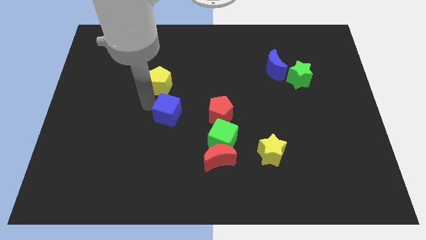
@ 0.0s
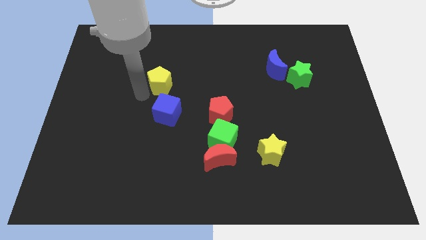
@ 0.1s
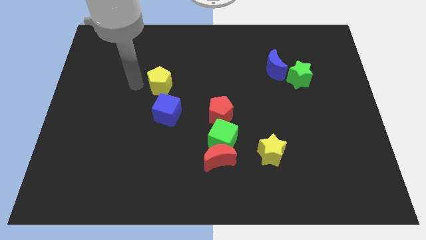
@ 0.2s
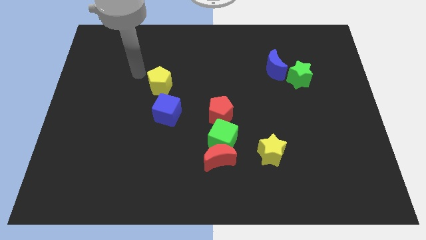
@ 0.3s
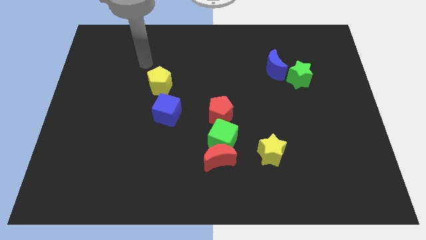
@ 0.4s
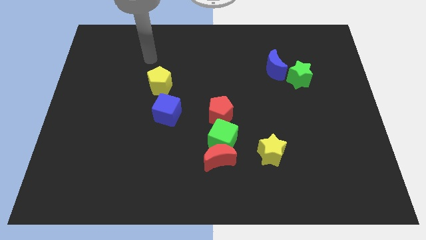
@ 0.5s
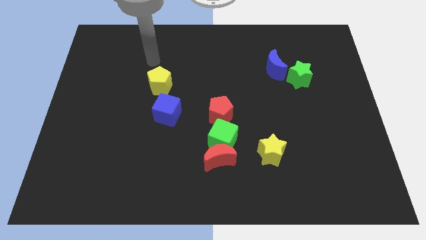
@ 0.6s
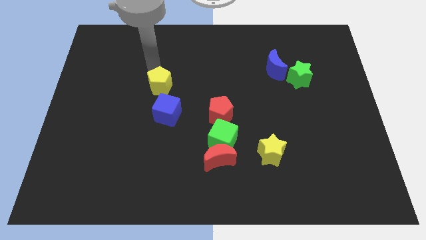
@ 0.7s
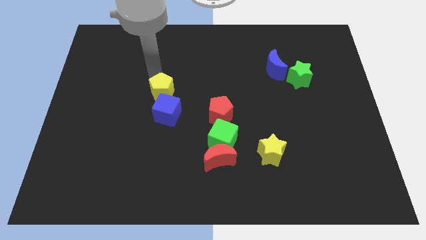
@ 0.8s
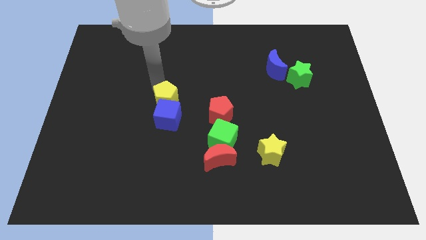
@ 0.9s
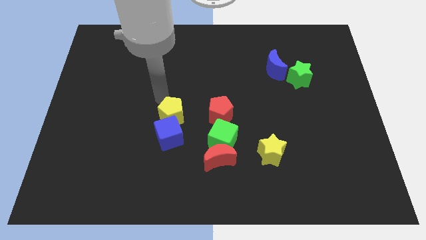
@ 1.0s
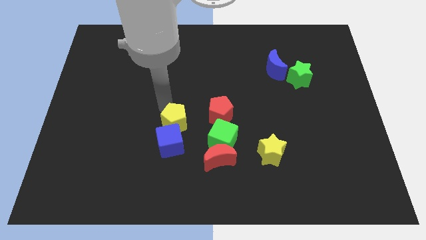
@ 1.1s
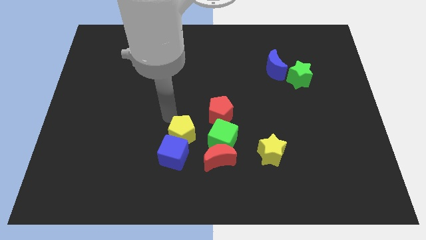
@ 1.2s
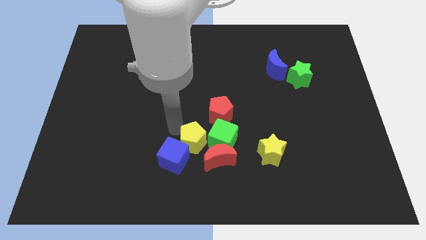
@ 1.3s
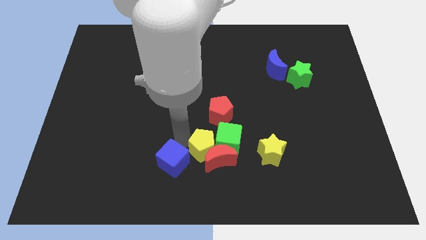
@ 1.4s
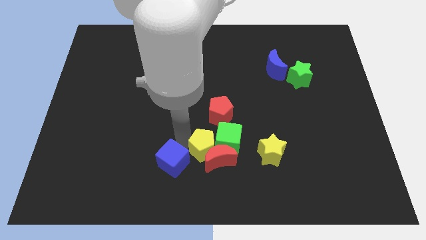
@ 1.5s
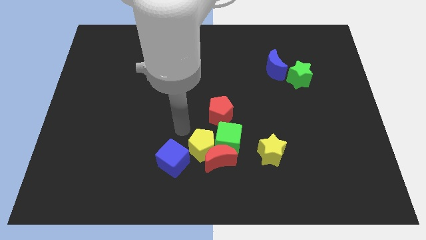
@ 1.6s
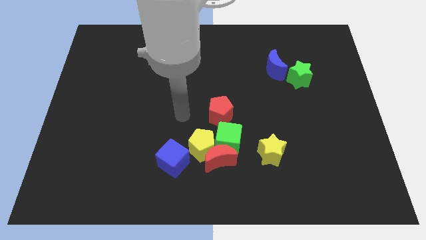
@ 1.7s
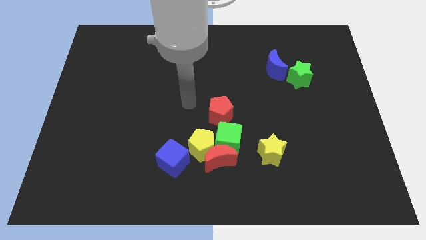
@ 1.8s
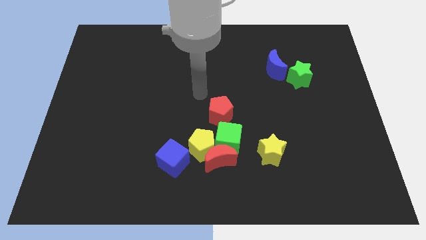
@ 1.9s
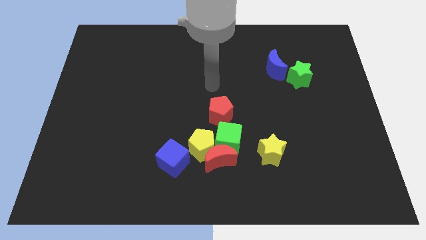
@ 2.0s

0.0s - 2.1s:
move yellow pentagon and blue cube towards red moon

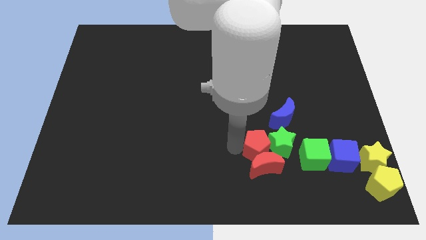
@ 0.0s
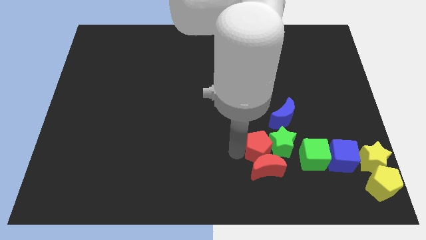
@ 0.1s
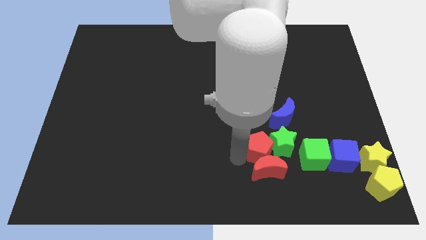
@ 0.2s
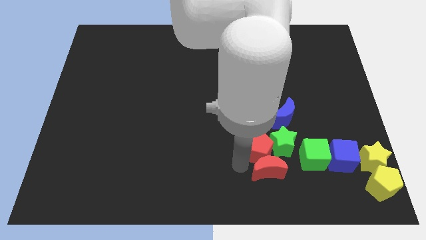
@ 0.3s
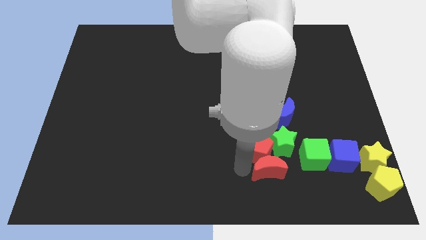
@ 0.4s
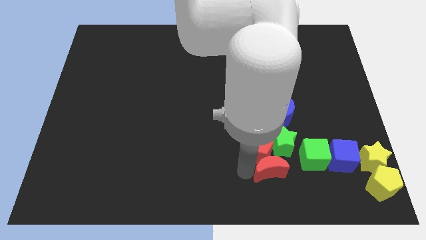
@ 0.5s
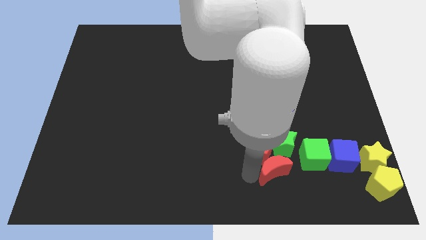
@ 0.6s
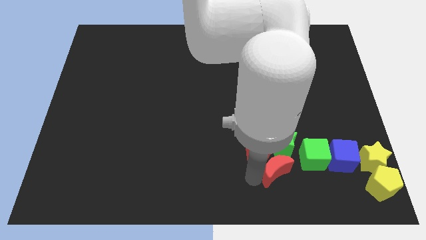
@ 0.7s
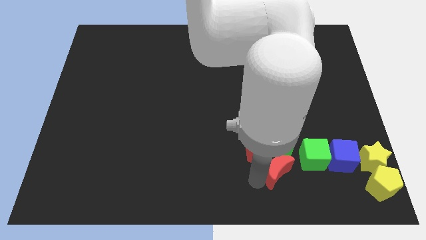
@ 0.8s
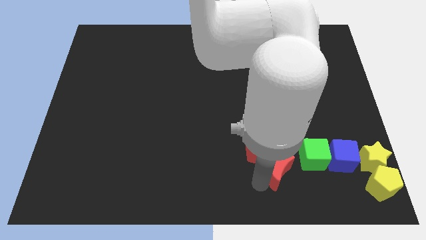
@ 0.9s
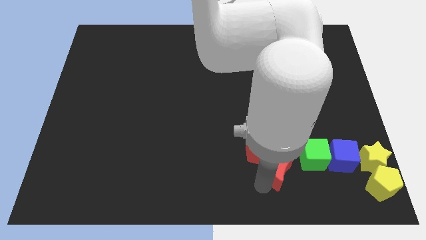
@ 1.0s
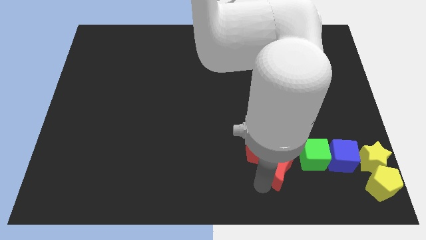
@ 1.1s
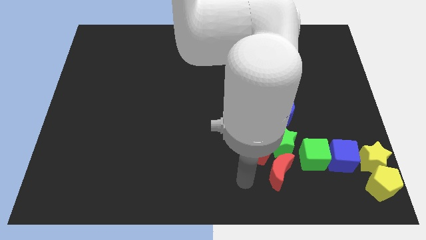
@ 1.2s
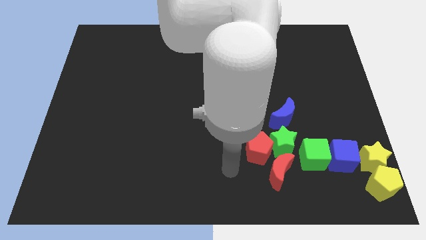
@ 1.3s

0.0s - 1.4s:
put the red moon underneath the green star

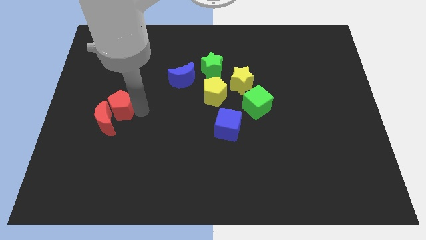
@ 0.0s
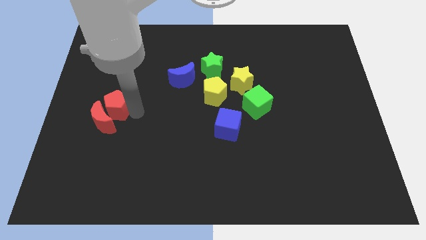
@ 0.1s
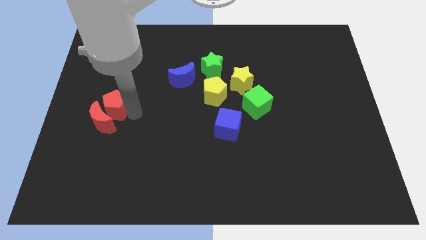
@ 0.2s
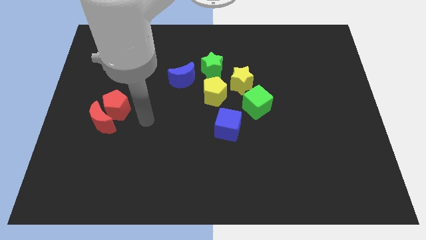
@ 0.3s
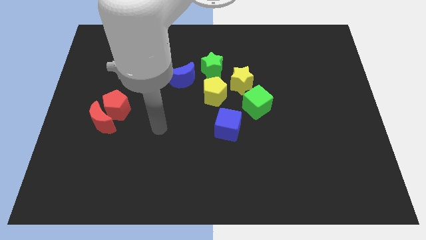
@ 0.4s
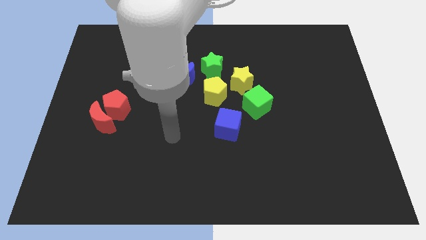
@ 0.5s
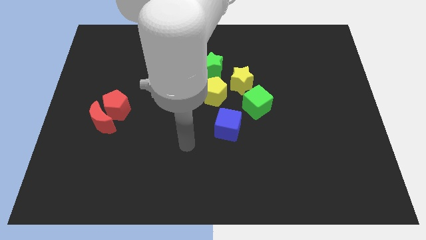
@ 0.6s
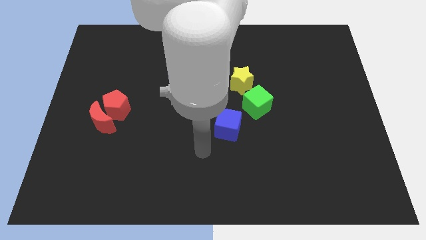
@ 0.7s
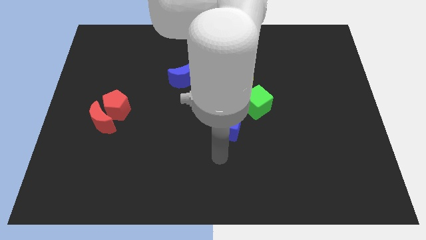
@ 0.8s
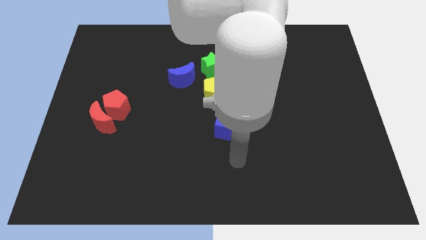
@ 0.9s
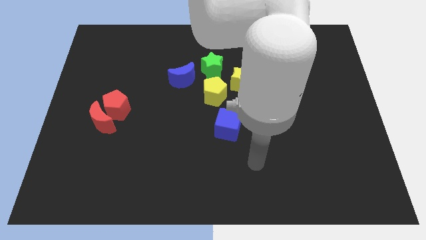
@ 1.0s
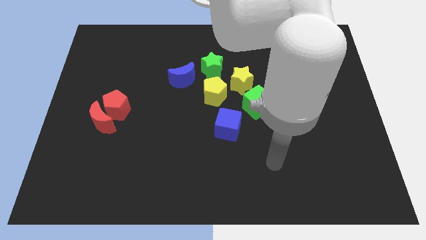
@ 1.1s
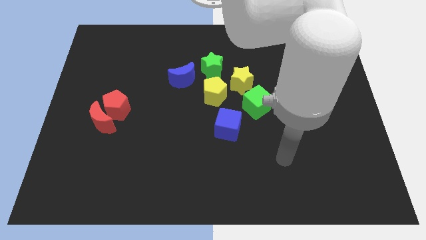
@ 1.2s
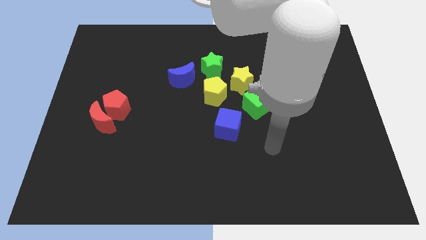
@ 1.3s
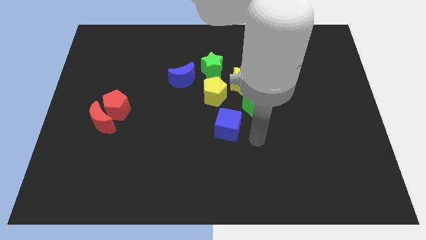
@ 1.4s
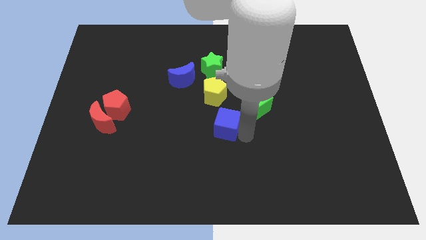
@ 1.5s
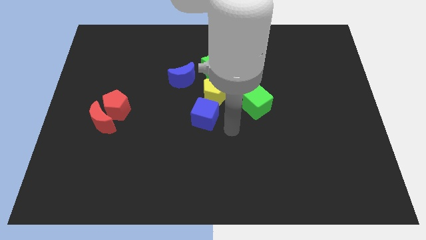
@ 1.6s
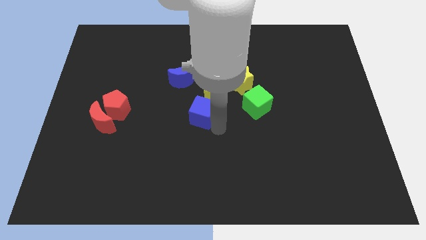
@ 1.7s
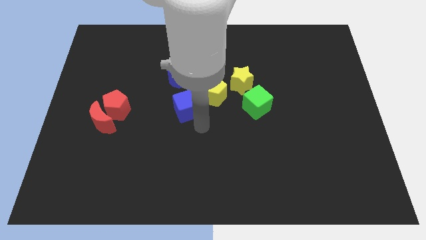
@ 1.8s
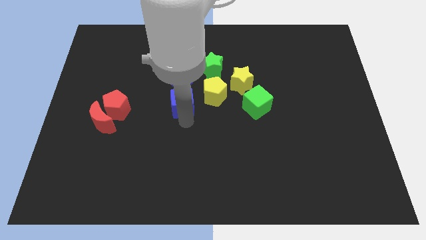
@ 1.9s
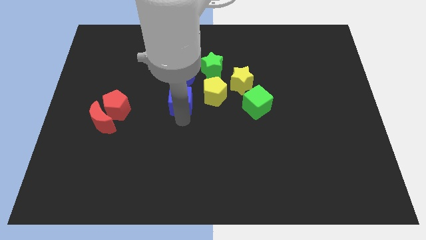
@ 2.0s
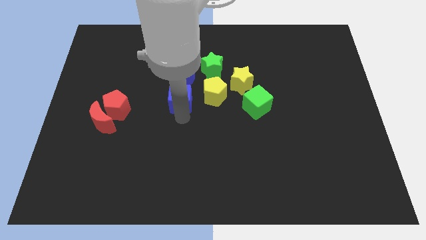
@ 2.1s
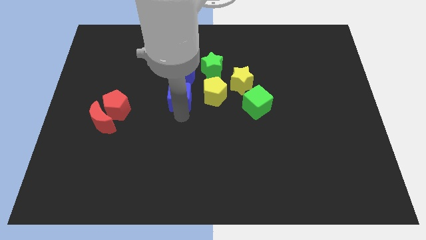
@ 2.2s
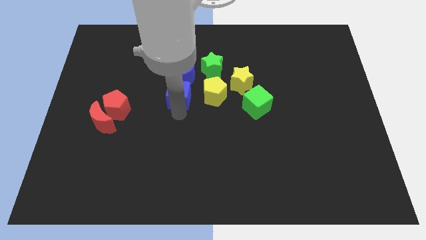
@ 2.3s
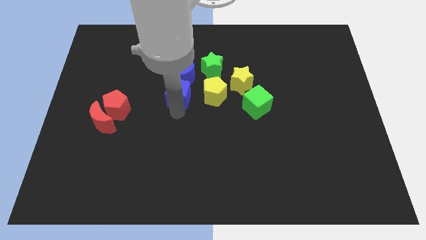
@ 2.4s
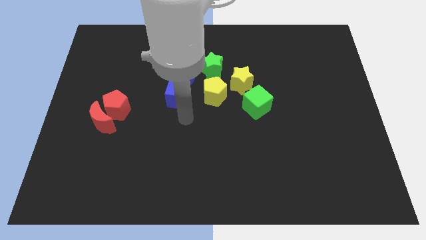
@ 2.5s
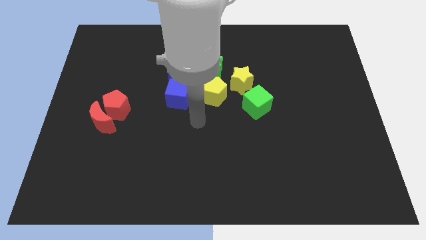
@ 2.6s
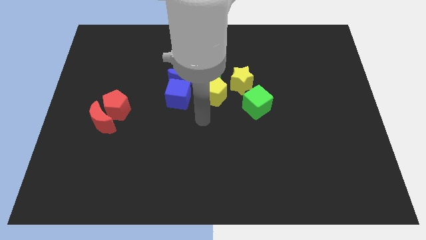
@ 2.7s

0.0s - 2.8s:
move the arm away from the red pentagon

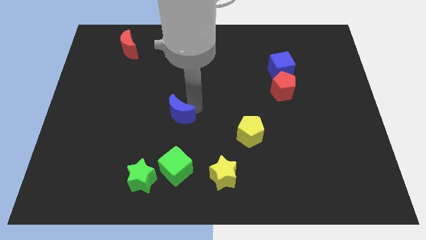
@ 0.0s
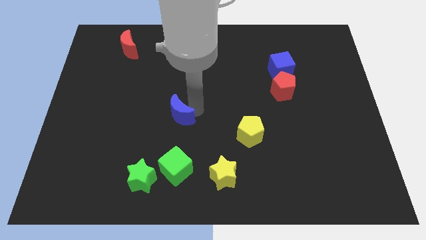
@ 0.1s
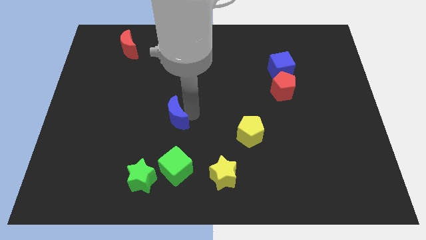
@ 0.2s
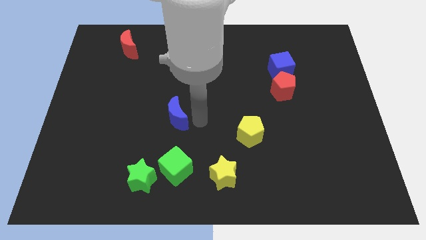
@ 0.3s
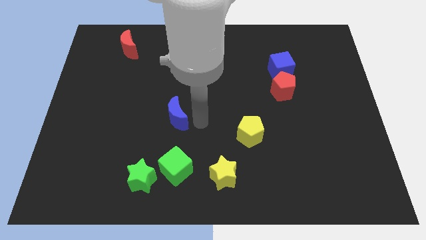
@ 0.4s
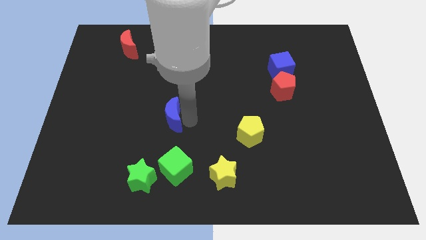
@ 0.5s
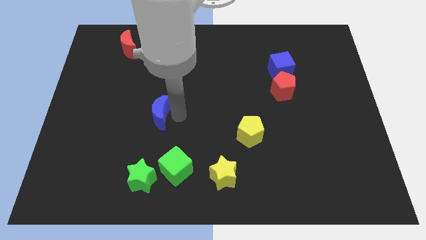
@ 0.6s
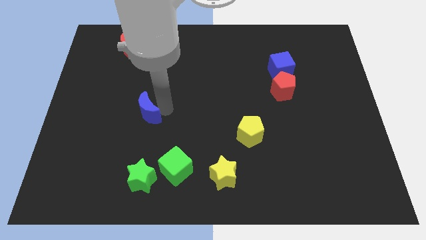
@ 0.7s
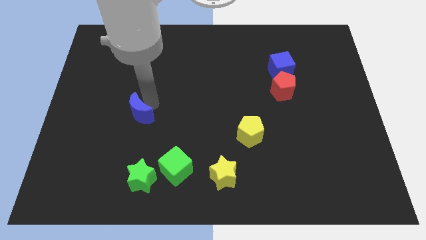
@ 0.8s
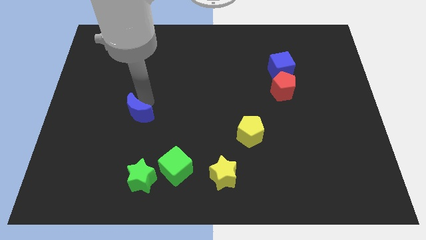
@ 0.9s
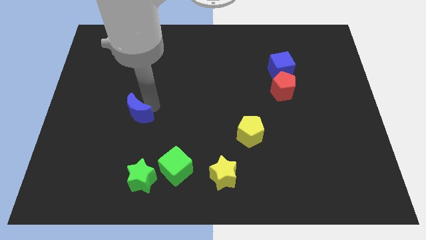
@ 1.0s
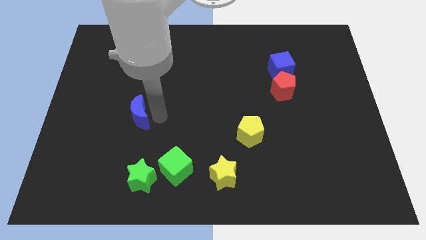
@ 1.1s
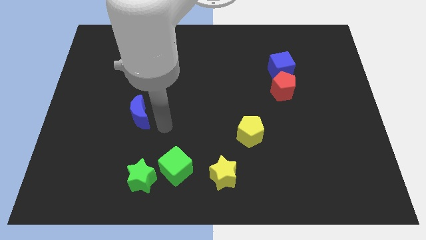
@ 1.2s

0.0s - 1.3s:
place the blue crescent vertically above the green star

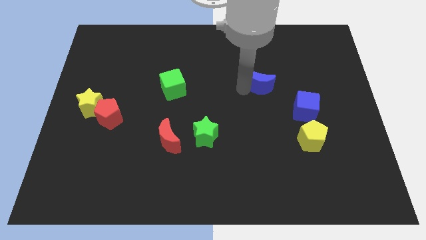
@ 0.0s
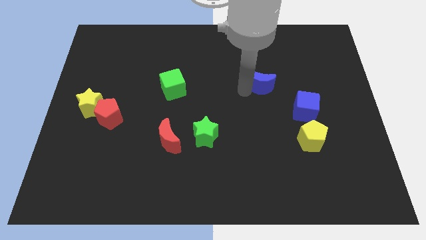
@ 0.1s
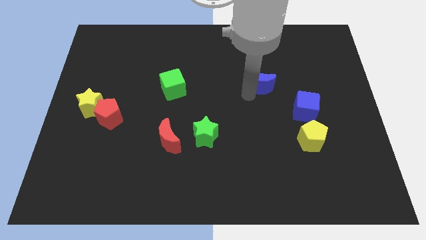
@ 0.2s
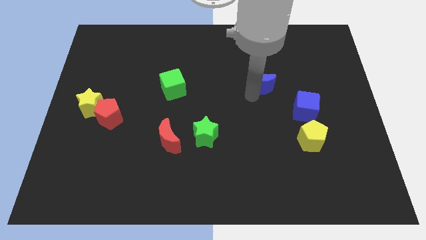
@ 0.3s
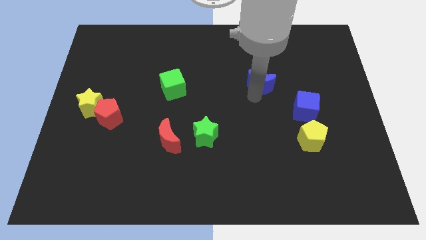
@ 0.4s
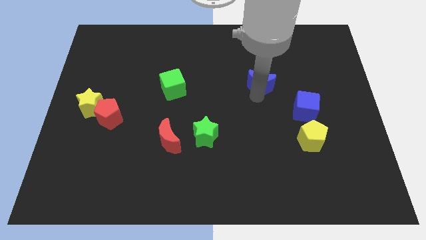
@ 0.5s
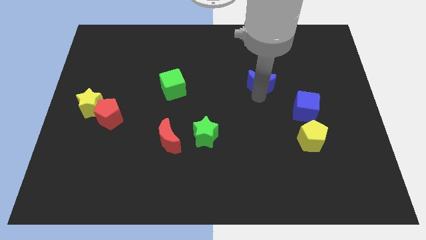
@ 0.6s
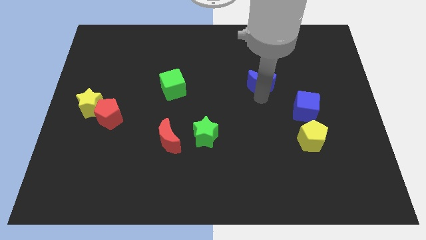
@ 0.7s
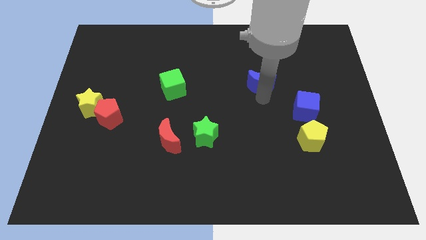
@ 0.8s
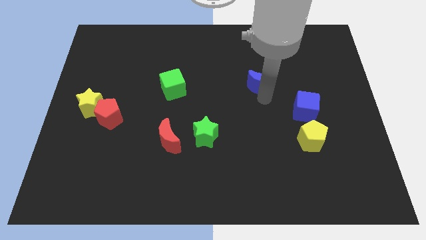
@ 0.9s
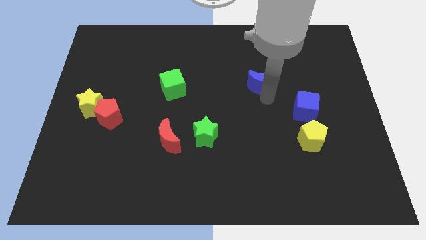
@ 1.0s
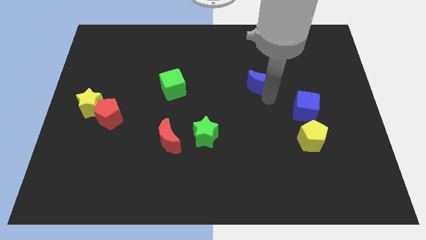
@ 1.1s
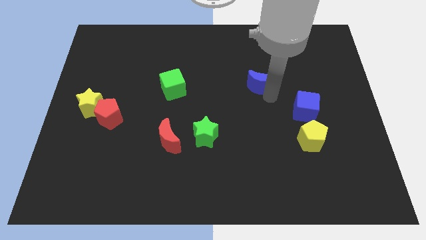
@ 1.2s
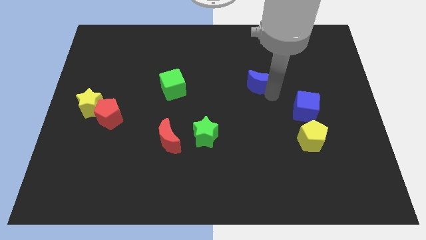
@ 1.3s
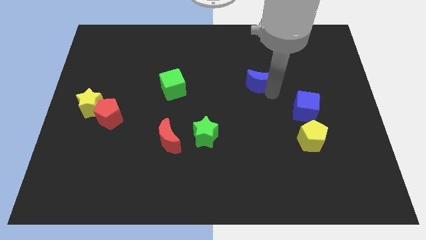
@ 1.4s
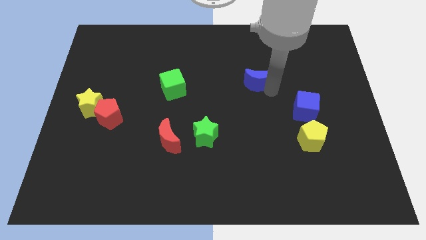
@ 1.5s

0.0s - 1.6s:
slightly move blue crescent on the right
